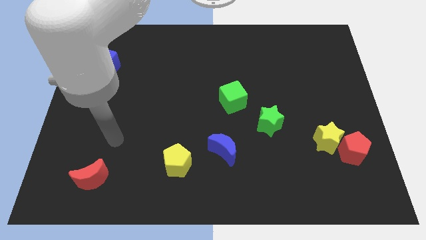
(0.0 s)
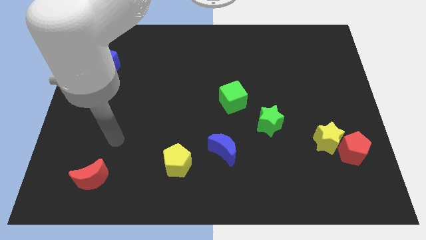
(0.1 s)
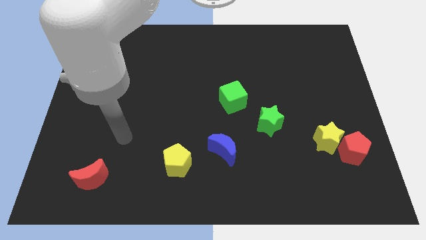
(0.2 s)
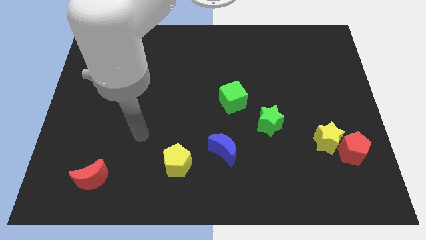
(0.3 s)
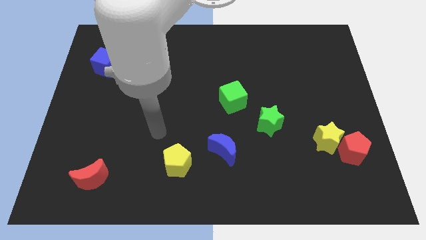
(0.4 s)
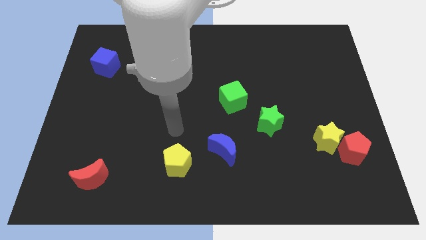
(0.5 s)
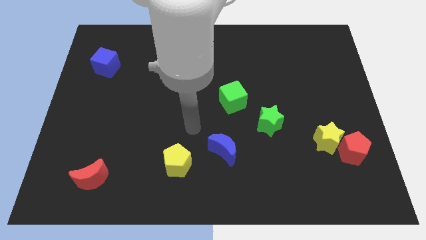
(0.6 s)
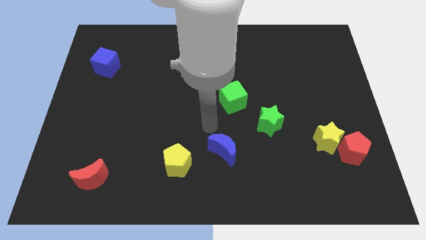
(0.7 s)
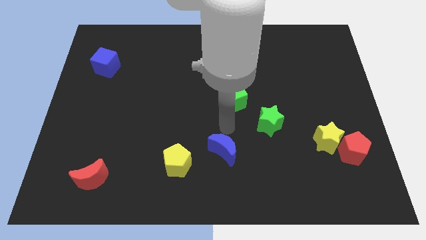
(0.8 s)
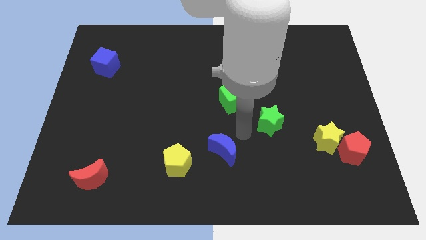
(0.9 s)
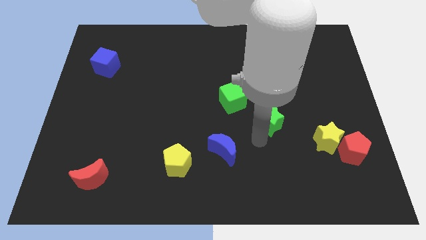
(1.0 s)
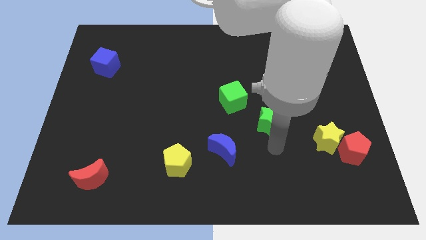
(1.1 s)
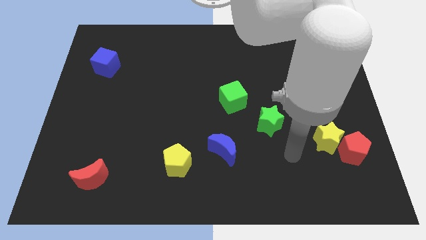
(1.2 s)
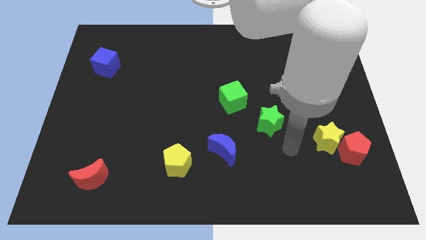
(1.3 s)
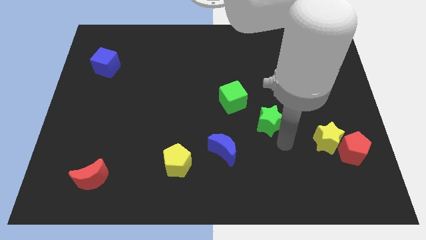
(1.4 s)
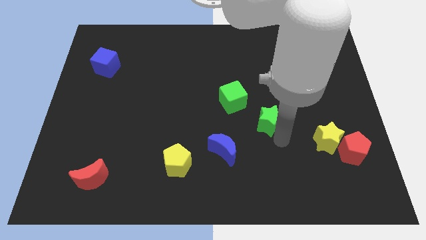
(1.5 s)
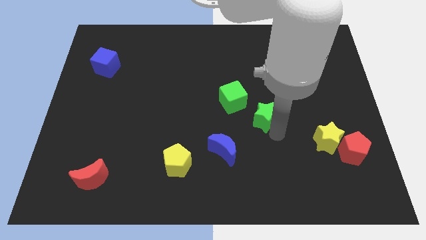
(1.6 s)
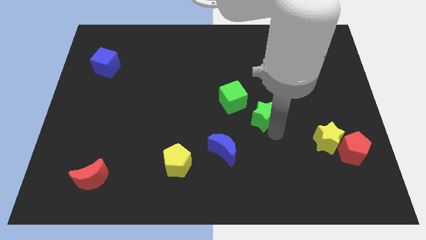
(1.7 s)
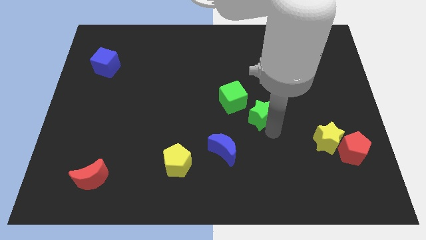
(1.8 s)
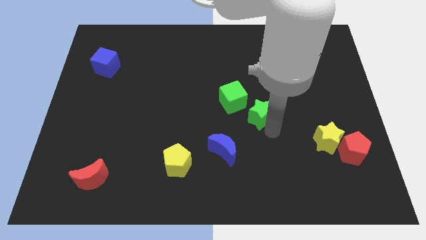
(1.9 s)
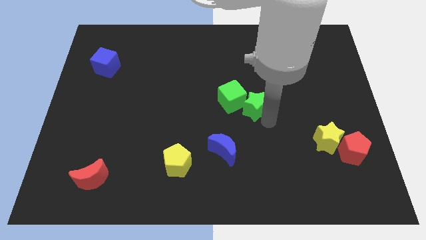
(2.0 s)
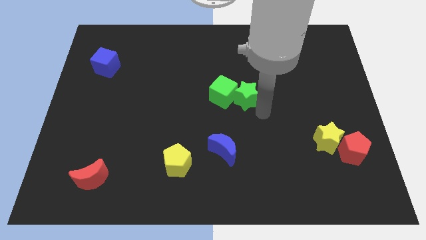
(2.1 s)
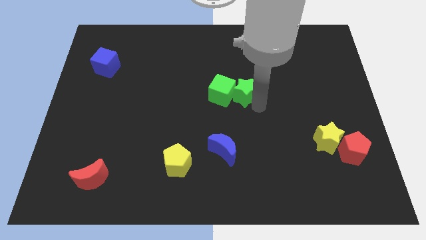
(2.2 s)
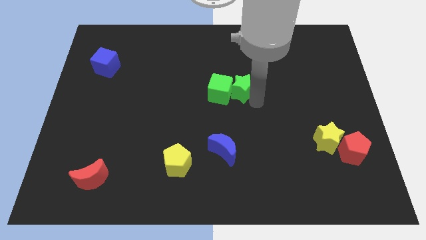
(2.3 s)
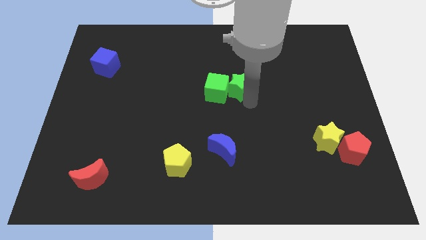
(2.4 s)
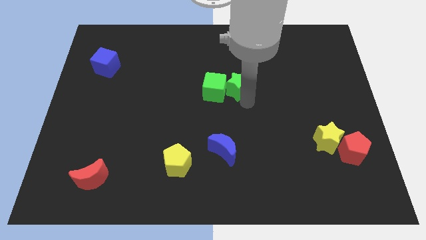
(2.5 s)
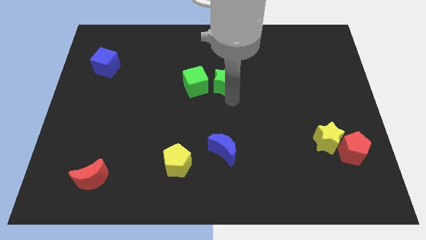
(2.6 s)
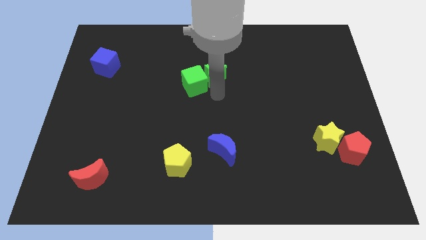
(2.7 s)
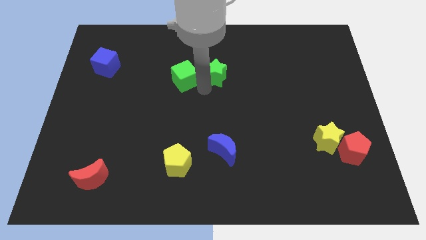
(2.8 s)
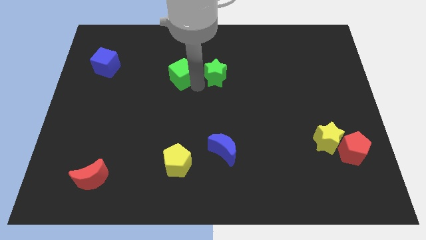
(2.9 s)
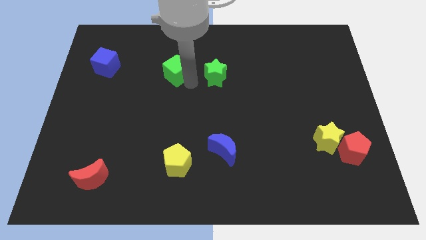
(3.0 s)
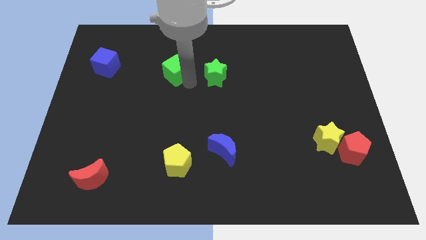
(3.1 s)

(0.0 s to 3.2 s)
move both the green stars horizontal to each other

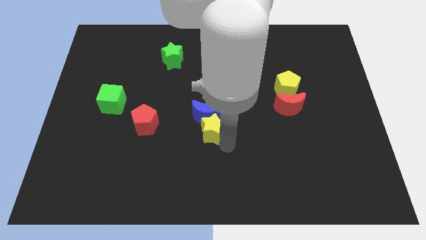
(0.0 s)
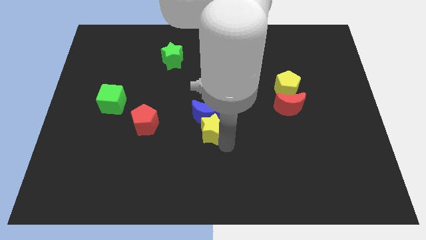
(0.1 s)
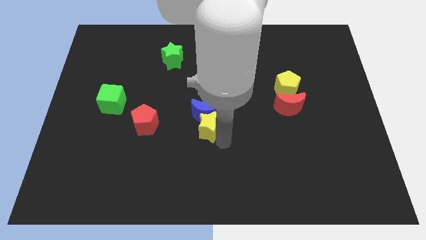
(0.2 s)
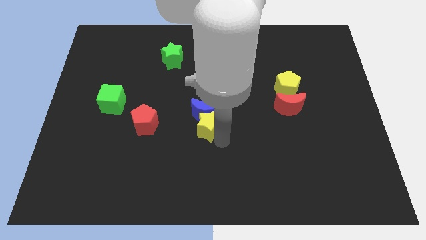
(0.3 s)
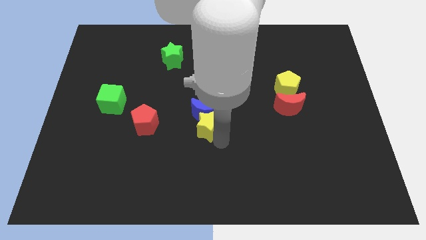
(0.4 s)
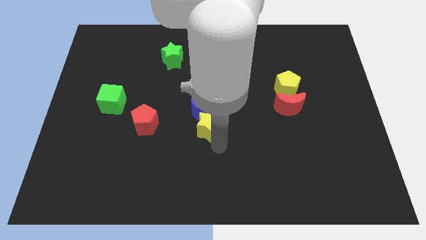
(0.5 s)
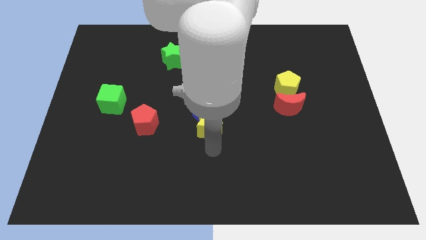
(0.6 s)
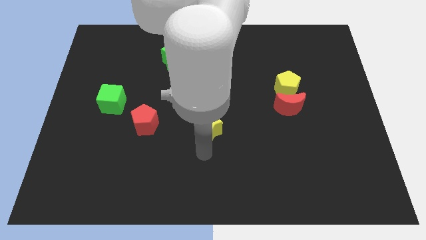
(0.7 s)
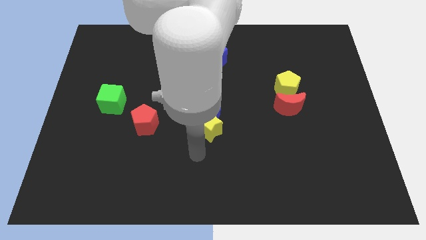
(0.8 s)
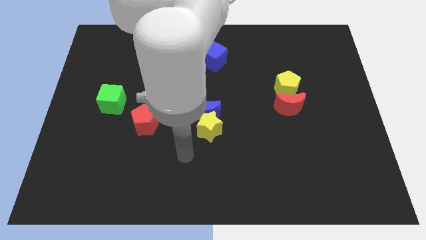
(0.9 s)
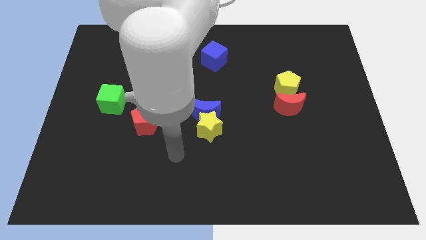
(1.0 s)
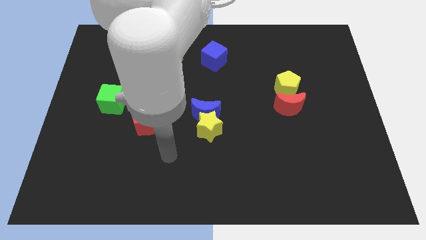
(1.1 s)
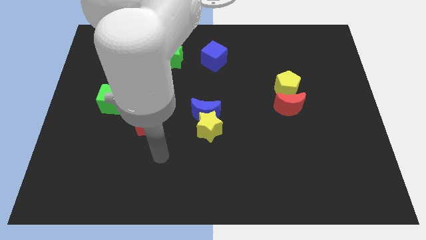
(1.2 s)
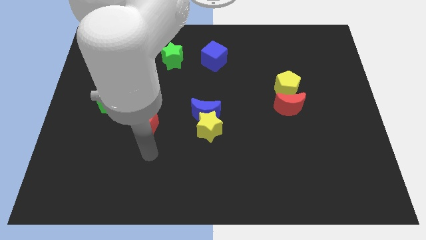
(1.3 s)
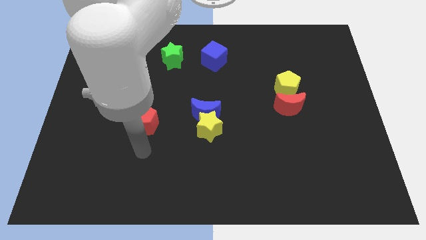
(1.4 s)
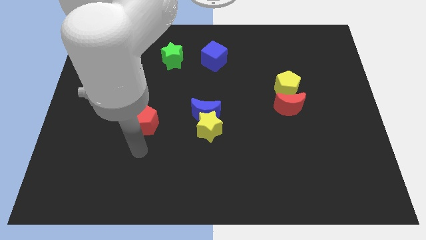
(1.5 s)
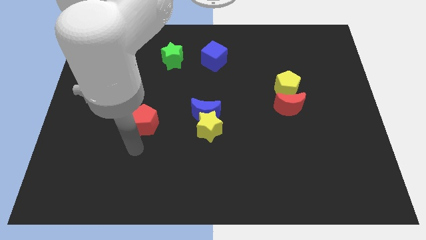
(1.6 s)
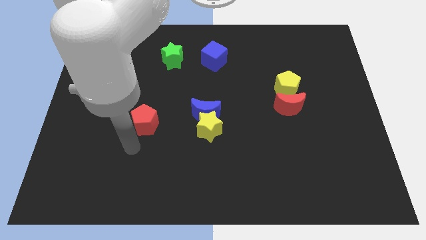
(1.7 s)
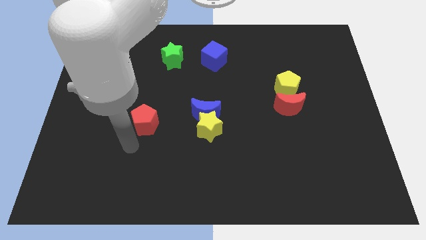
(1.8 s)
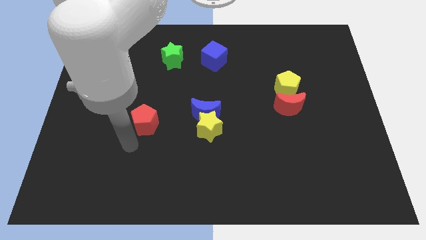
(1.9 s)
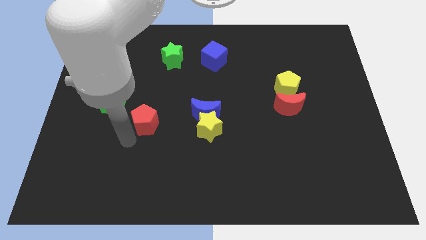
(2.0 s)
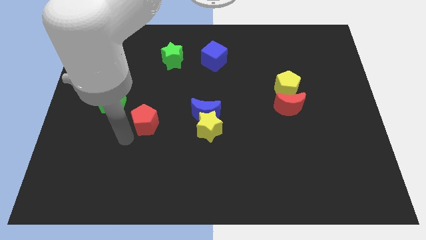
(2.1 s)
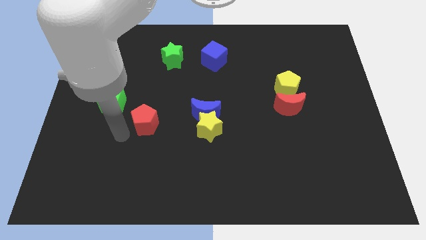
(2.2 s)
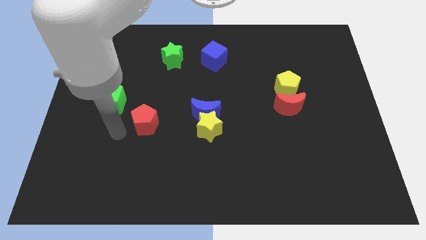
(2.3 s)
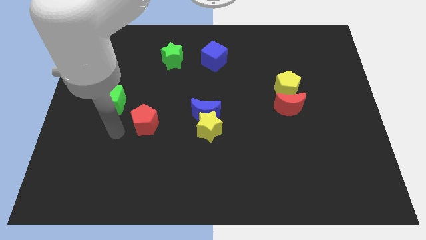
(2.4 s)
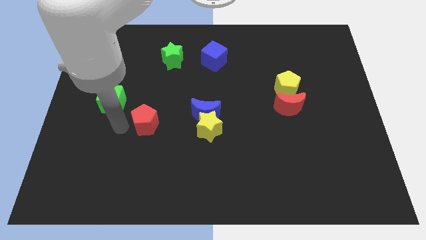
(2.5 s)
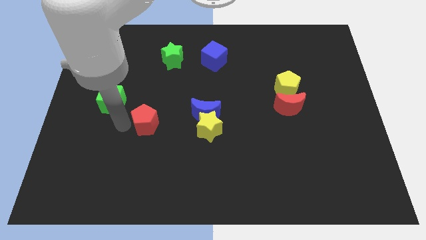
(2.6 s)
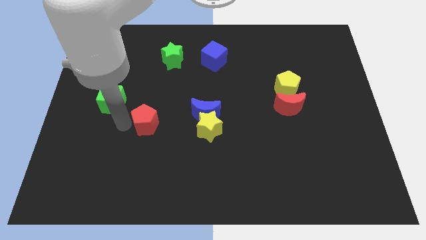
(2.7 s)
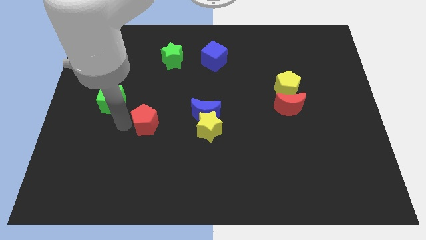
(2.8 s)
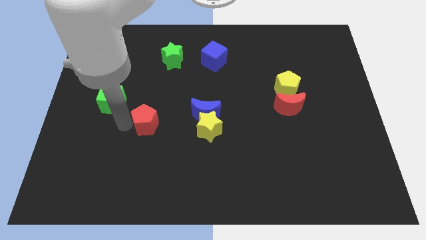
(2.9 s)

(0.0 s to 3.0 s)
go and point your hand at the left of the red pentagon

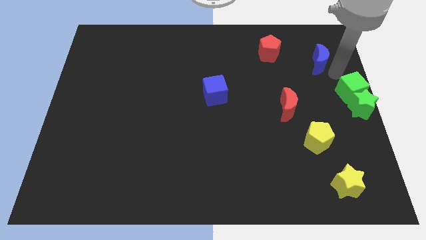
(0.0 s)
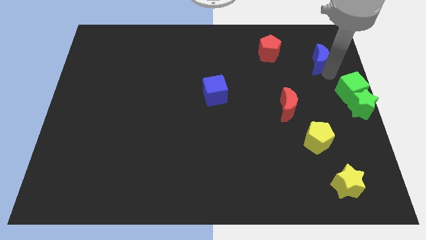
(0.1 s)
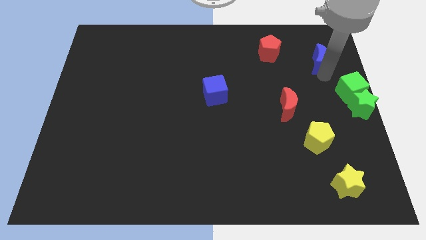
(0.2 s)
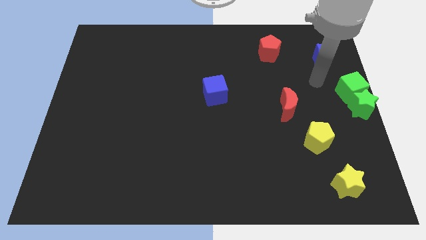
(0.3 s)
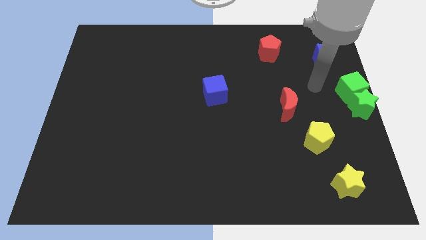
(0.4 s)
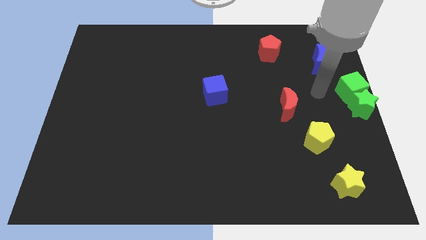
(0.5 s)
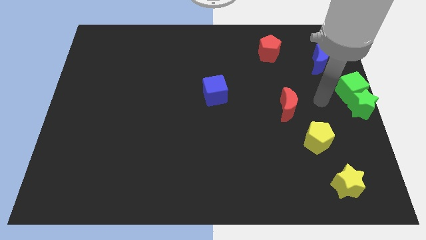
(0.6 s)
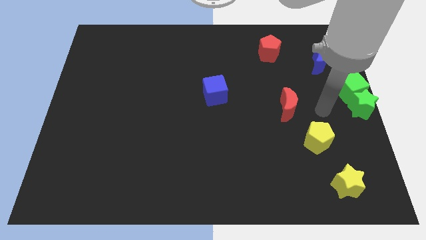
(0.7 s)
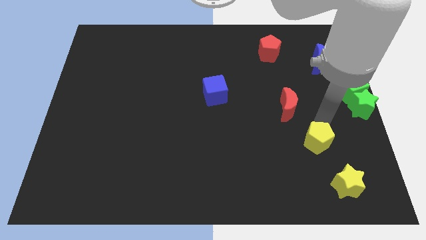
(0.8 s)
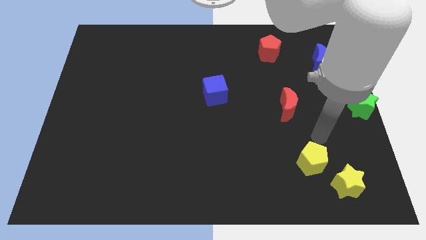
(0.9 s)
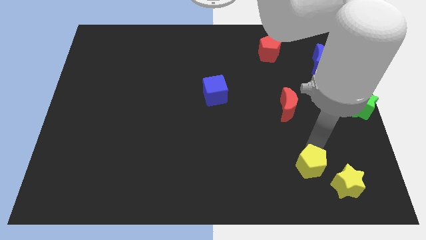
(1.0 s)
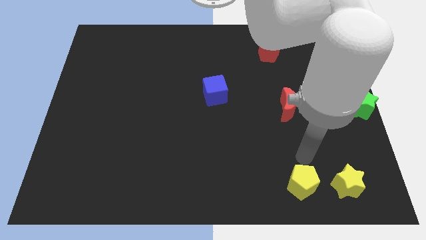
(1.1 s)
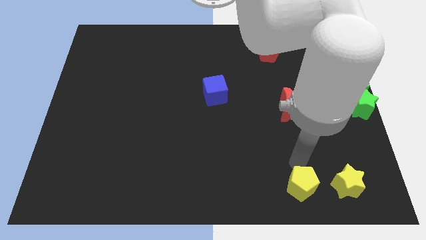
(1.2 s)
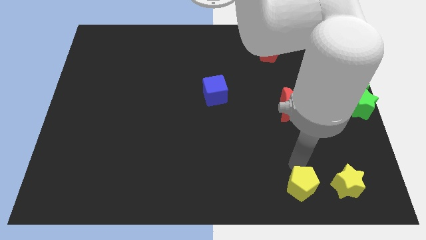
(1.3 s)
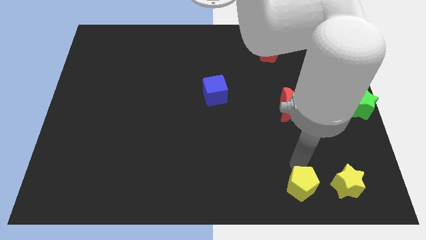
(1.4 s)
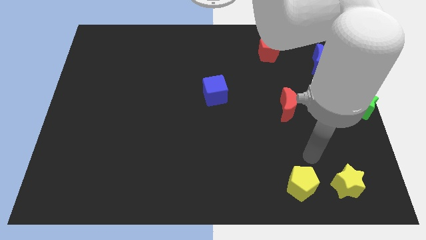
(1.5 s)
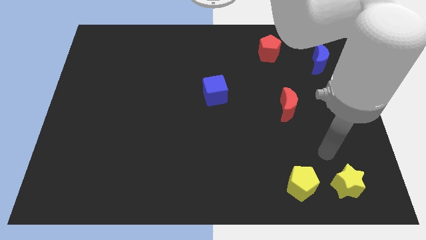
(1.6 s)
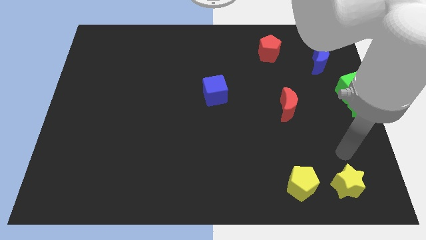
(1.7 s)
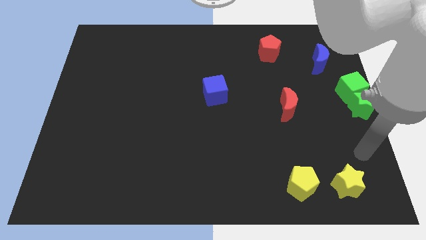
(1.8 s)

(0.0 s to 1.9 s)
move the yellow pentagon to the left side of the yellow star

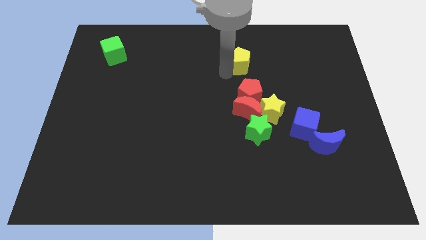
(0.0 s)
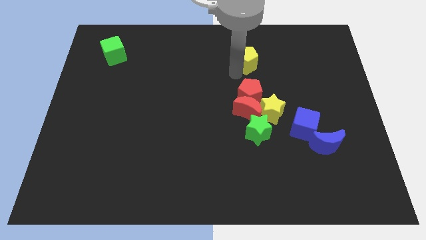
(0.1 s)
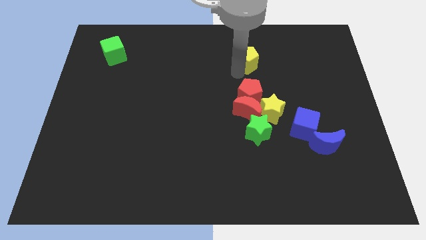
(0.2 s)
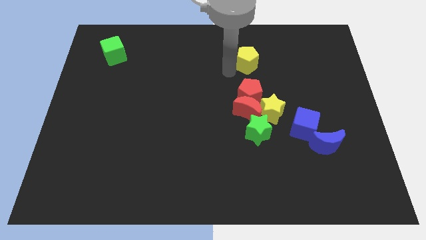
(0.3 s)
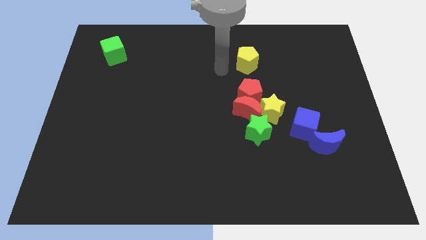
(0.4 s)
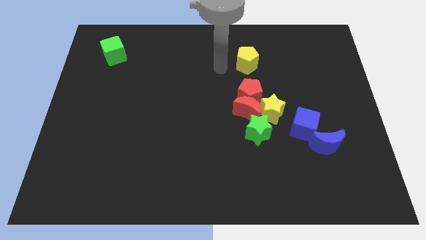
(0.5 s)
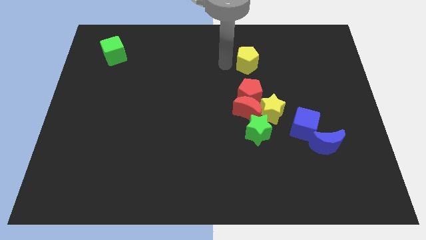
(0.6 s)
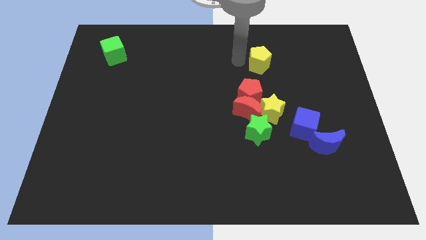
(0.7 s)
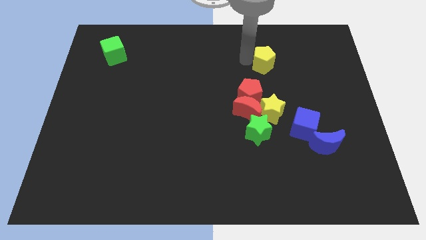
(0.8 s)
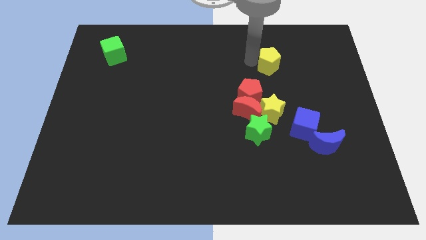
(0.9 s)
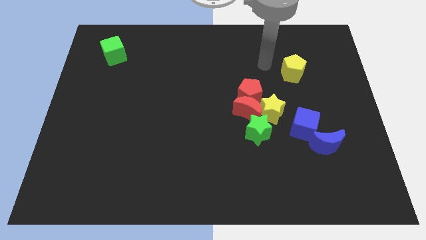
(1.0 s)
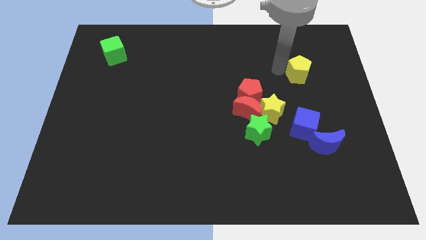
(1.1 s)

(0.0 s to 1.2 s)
push the yellow pentagon to the right of the board
